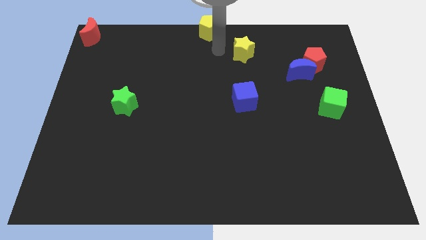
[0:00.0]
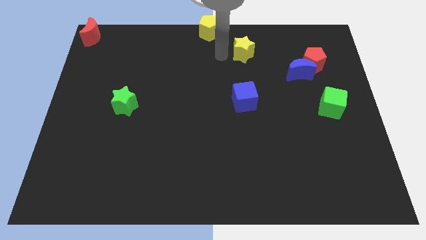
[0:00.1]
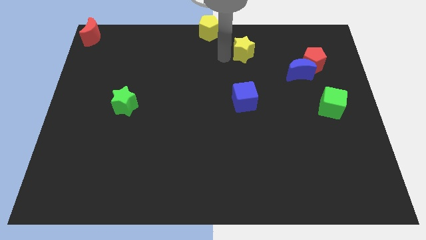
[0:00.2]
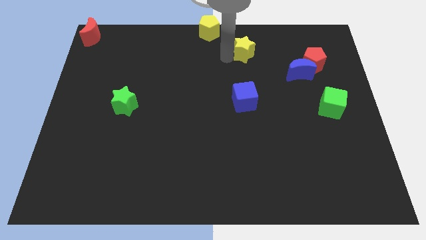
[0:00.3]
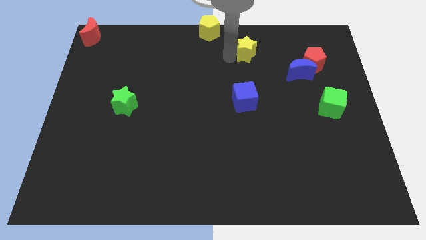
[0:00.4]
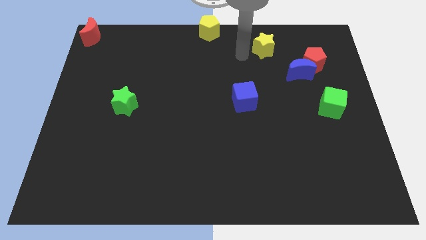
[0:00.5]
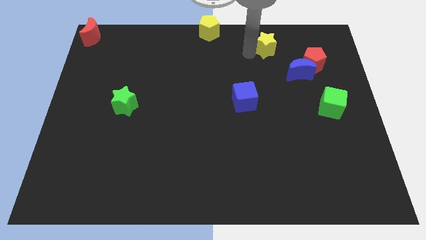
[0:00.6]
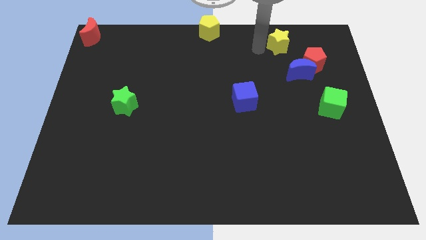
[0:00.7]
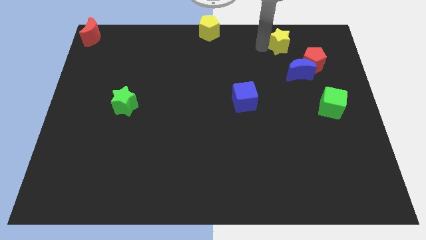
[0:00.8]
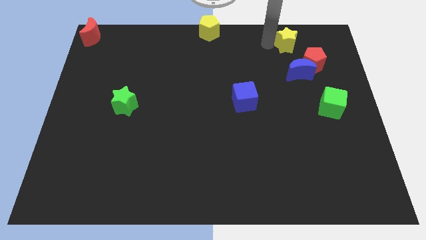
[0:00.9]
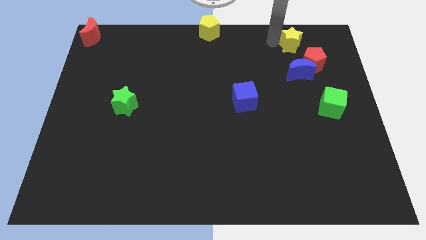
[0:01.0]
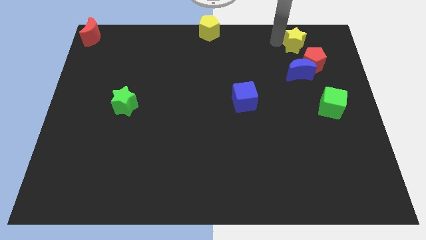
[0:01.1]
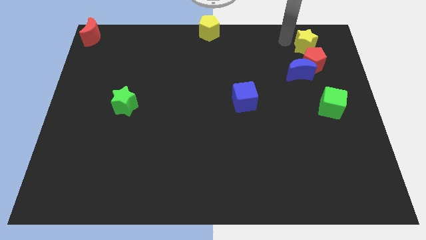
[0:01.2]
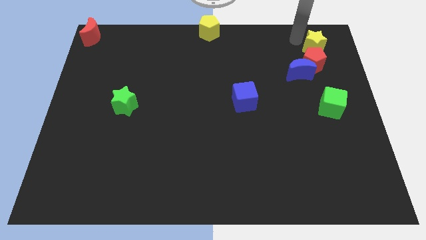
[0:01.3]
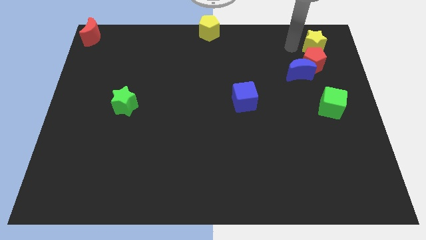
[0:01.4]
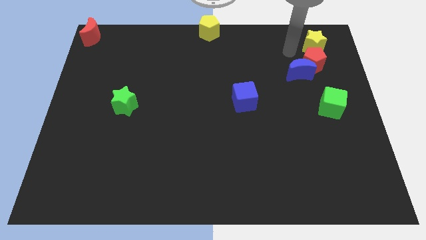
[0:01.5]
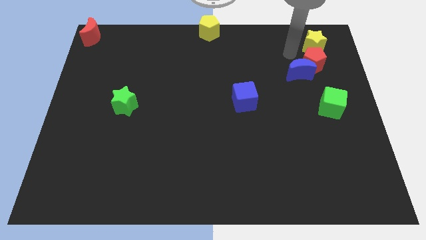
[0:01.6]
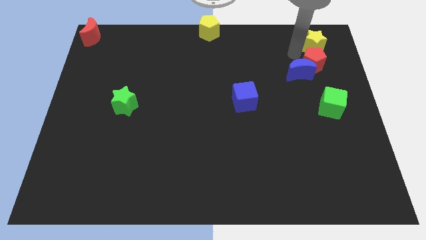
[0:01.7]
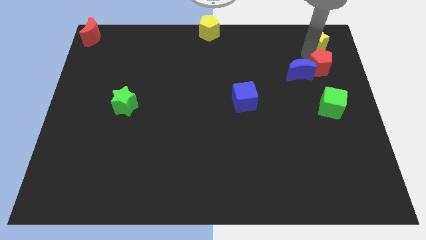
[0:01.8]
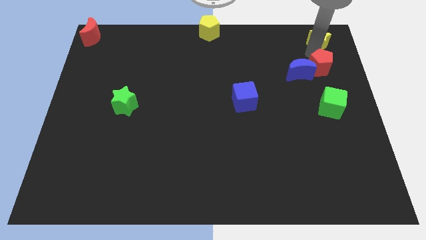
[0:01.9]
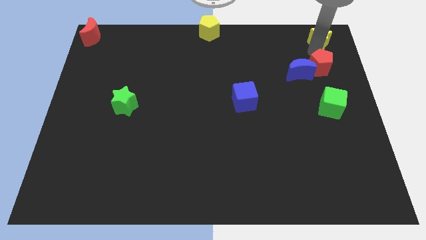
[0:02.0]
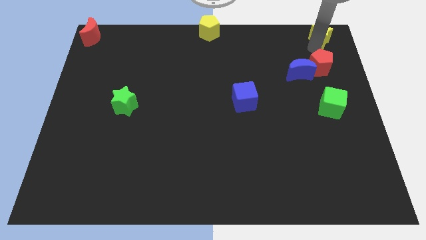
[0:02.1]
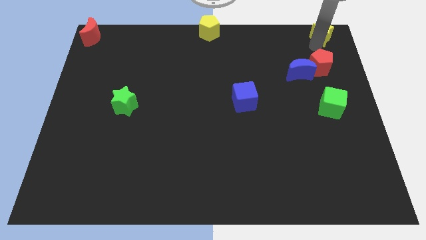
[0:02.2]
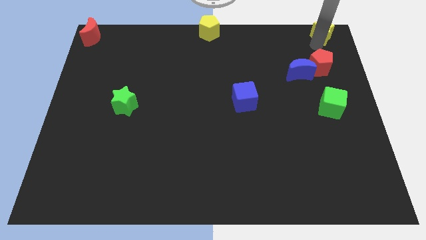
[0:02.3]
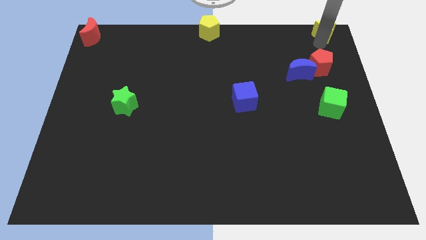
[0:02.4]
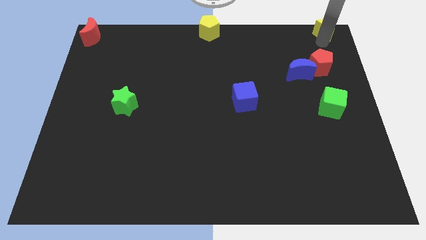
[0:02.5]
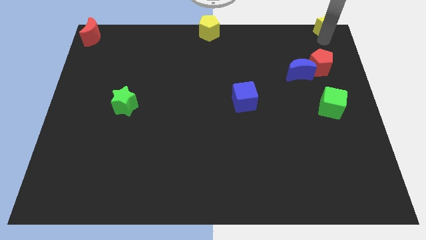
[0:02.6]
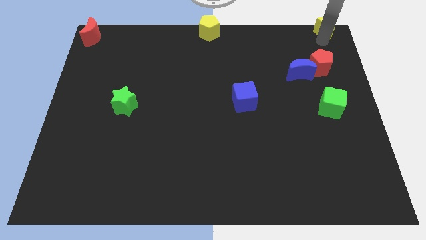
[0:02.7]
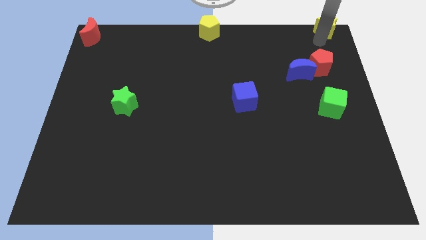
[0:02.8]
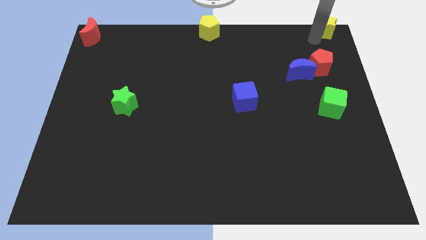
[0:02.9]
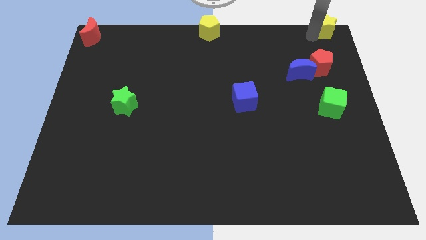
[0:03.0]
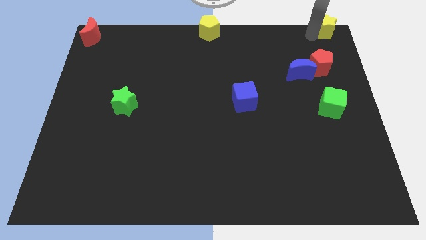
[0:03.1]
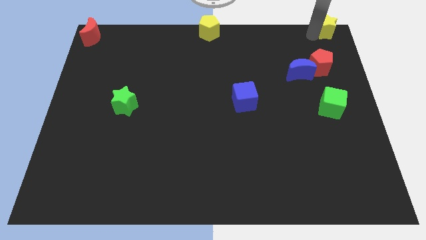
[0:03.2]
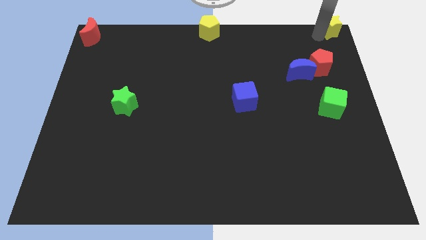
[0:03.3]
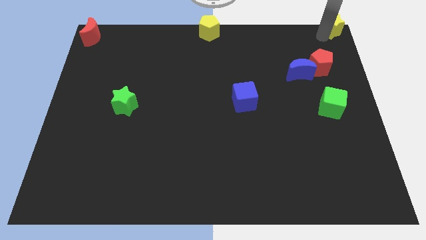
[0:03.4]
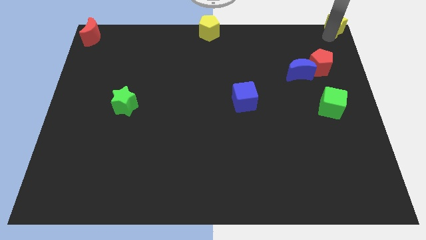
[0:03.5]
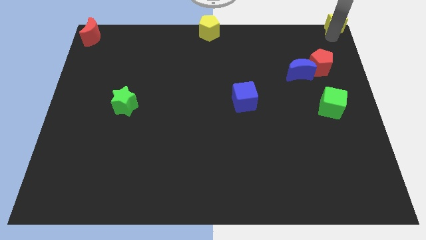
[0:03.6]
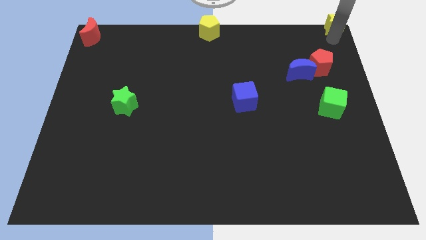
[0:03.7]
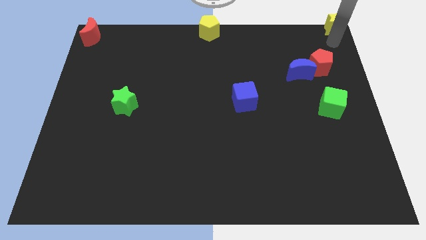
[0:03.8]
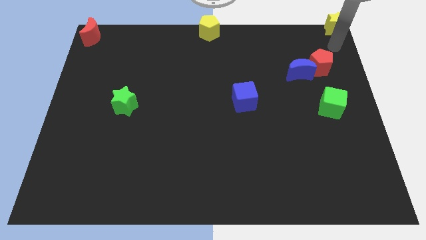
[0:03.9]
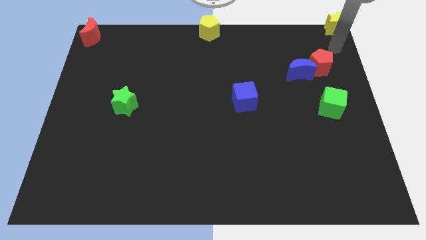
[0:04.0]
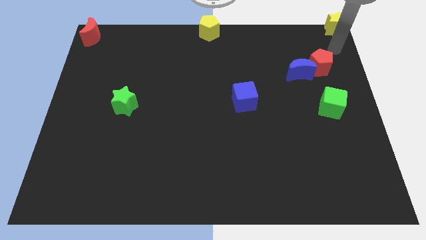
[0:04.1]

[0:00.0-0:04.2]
push the yellow star to the right top of the board

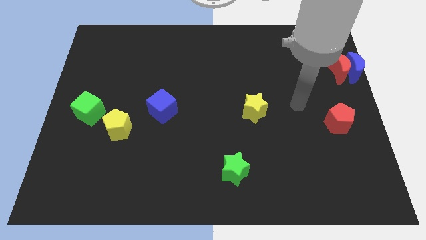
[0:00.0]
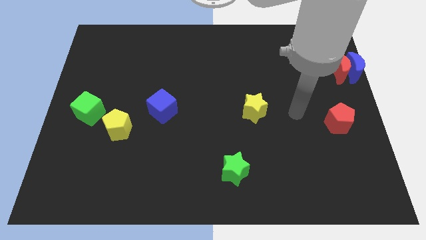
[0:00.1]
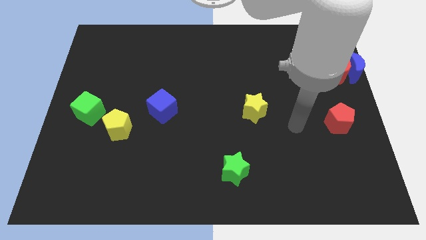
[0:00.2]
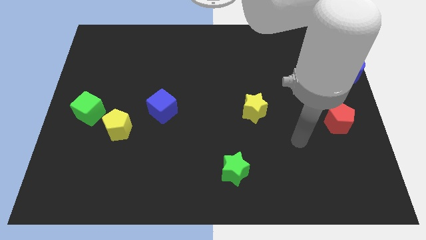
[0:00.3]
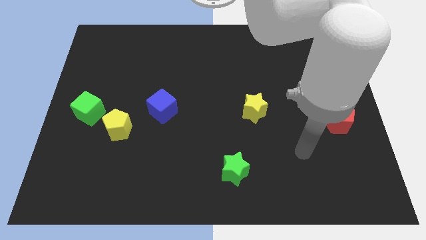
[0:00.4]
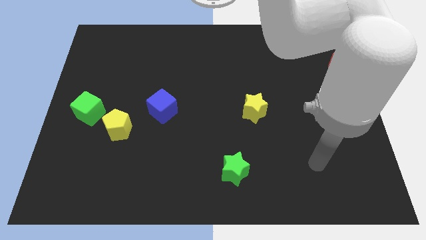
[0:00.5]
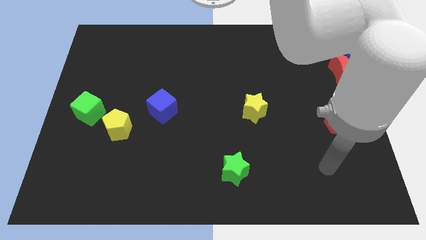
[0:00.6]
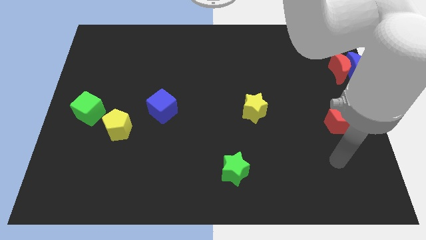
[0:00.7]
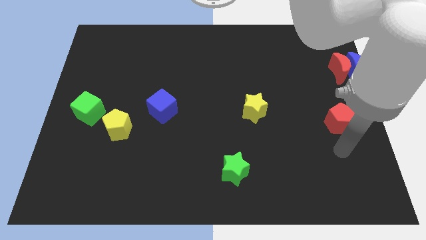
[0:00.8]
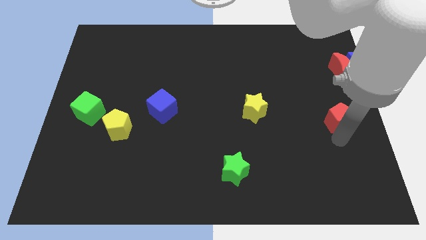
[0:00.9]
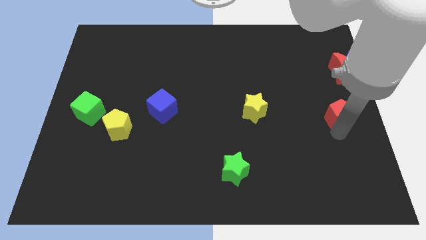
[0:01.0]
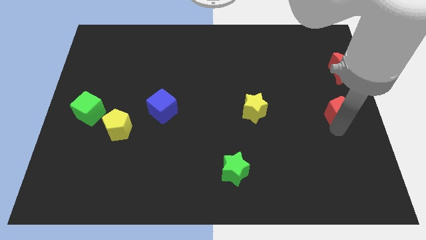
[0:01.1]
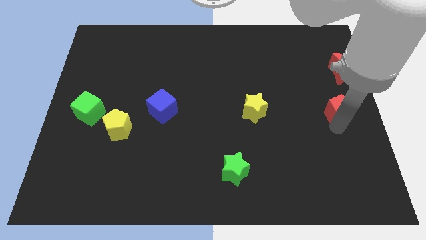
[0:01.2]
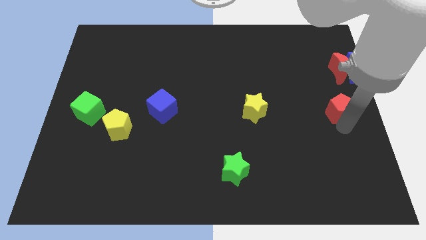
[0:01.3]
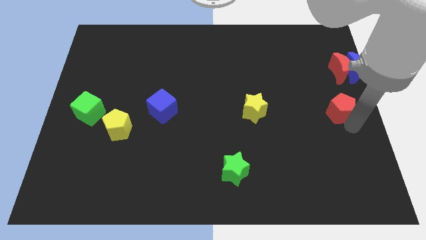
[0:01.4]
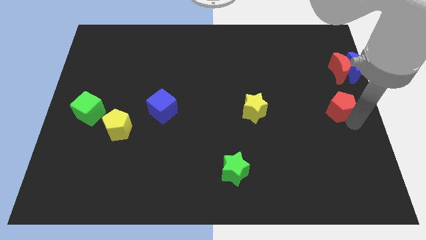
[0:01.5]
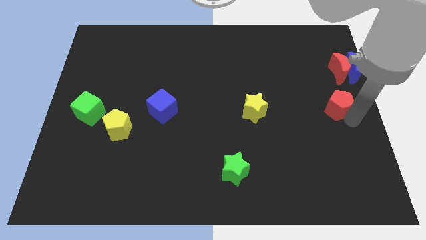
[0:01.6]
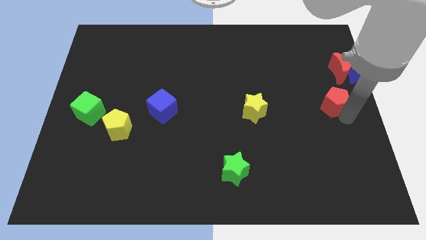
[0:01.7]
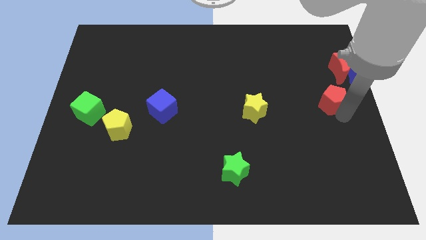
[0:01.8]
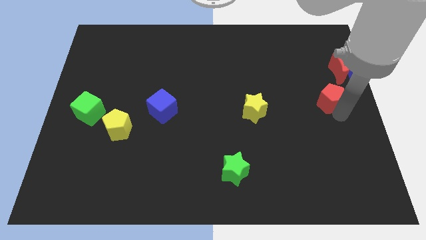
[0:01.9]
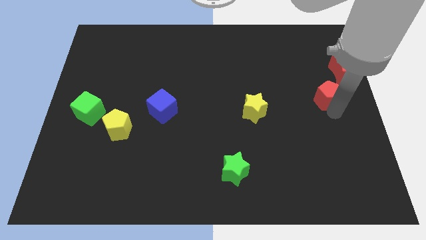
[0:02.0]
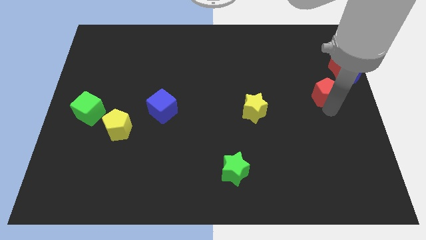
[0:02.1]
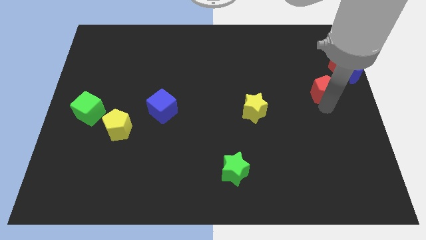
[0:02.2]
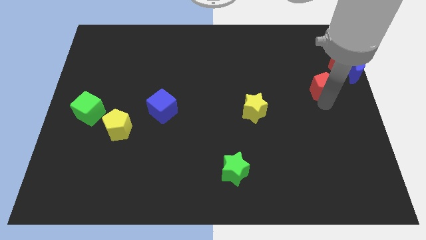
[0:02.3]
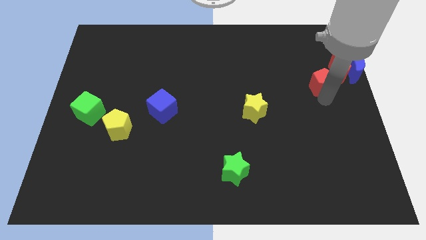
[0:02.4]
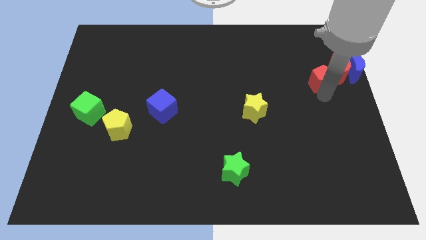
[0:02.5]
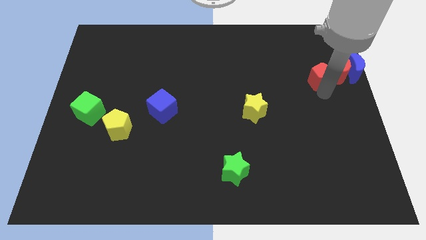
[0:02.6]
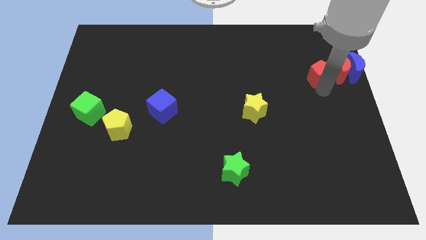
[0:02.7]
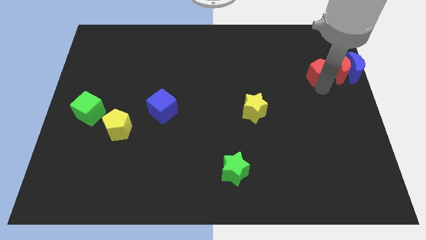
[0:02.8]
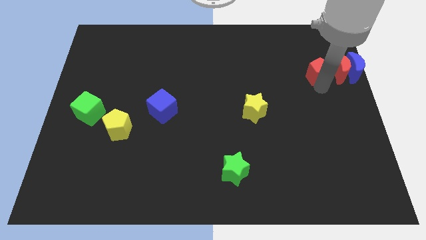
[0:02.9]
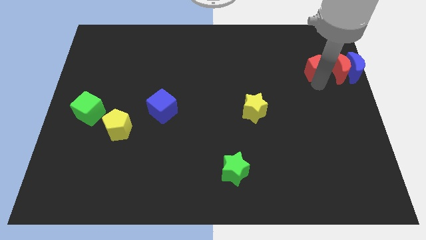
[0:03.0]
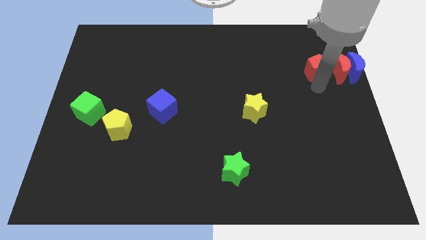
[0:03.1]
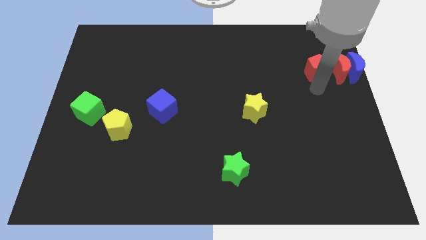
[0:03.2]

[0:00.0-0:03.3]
place the red pentagon horizontally to the left of the group of crescents

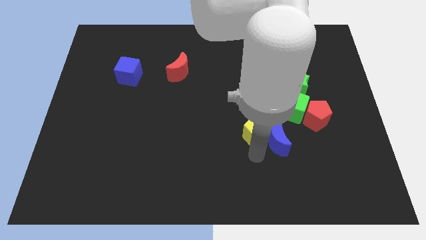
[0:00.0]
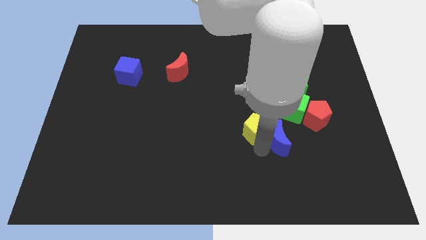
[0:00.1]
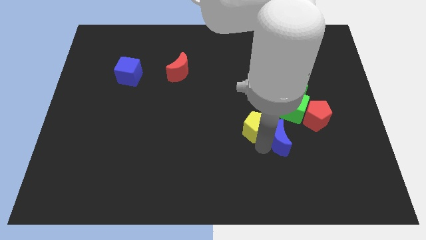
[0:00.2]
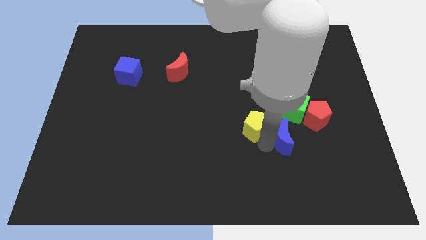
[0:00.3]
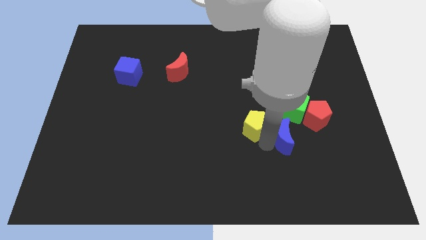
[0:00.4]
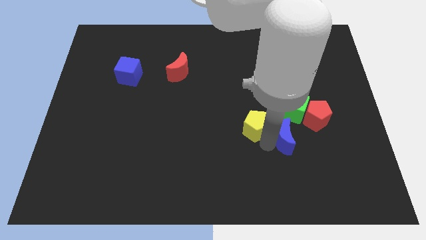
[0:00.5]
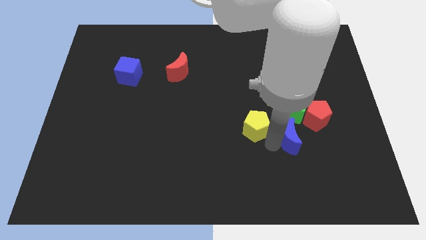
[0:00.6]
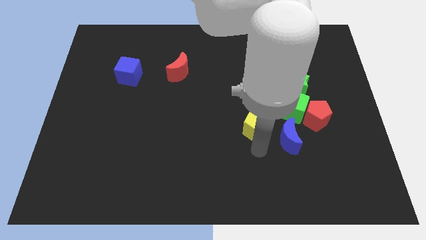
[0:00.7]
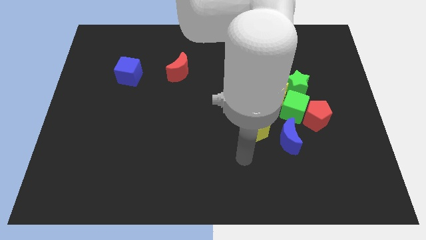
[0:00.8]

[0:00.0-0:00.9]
separate blue moon and yellow pentagon

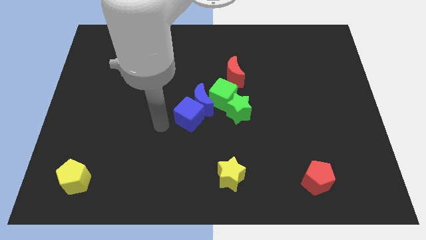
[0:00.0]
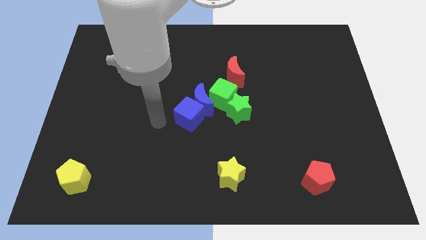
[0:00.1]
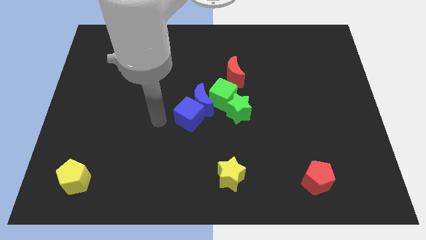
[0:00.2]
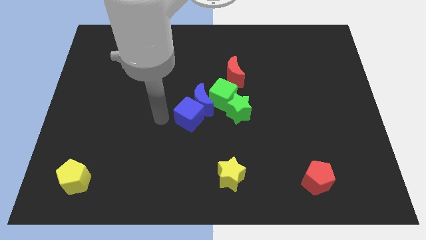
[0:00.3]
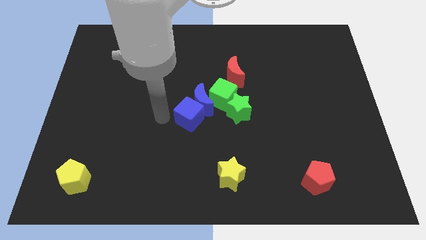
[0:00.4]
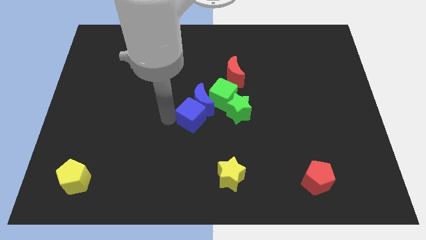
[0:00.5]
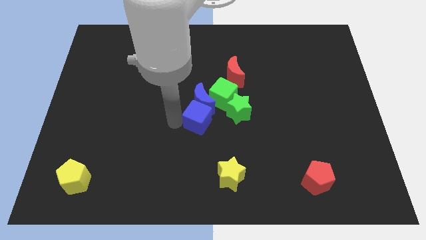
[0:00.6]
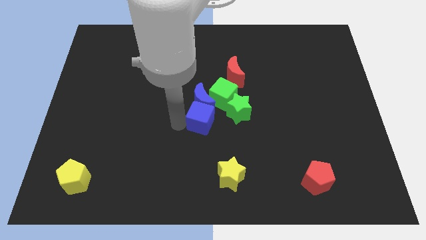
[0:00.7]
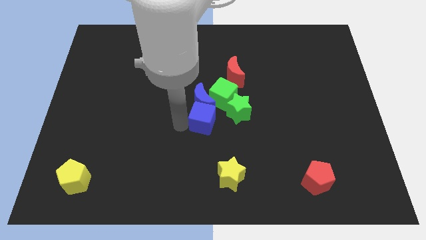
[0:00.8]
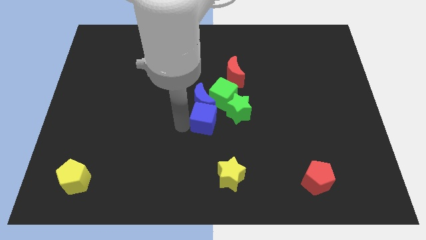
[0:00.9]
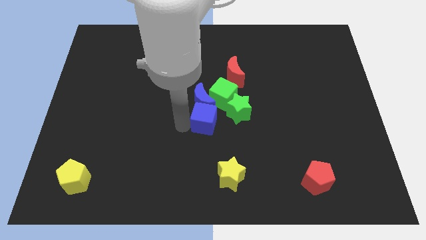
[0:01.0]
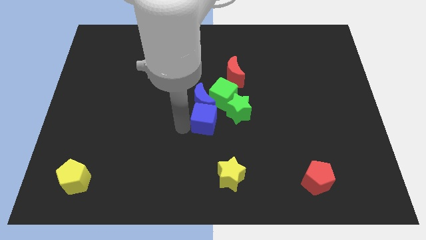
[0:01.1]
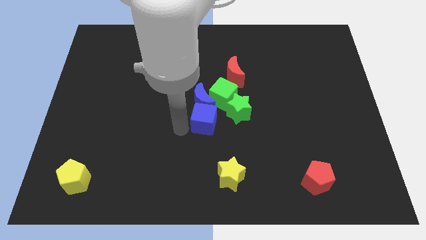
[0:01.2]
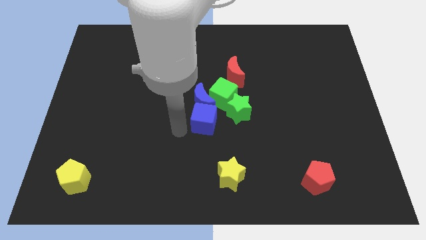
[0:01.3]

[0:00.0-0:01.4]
move blue cube below the blue moon
